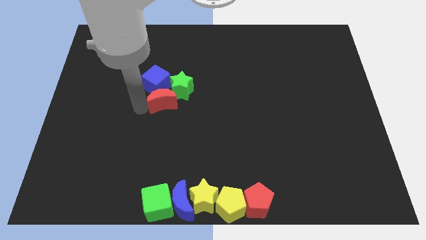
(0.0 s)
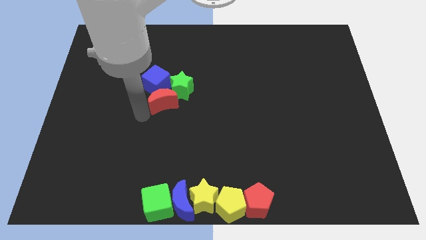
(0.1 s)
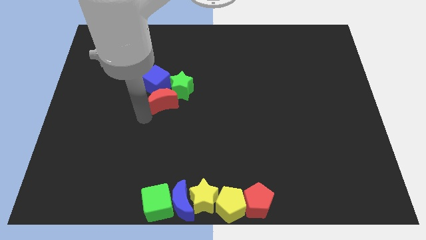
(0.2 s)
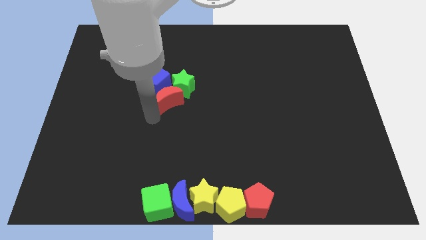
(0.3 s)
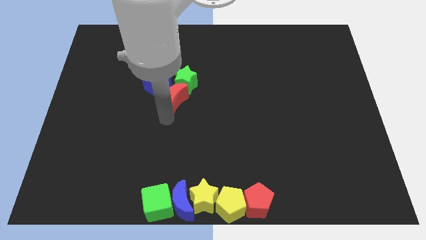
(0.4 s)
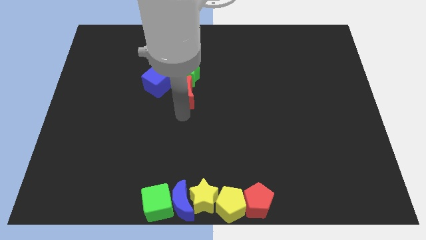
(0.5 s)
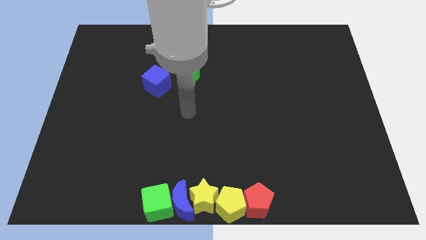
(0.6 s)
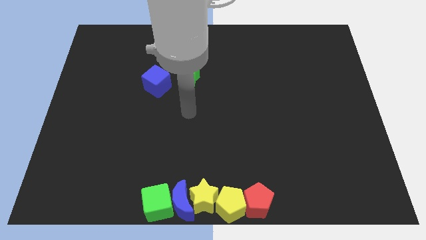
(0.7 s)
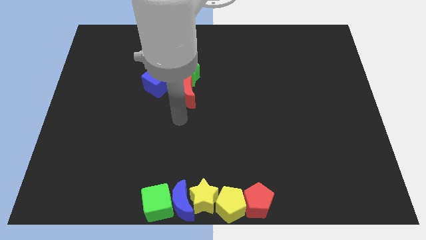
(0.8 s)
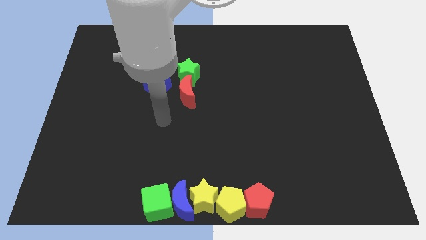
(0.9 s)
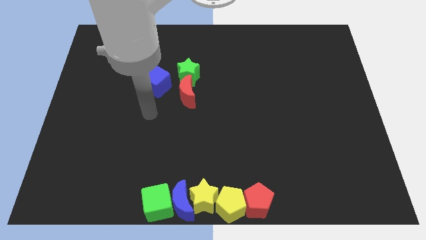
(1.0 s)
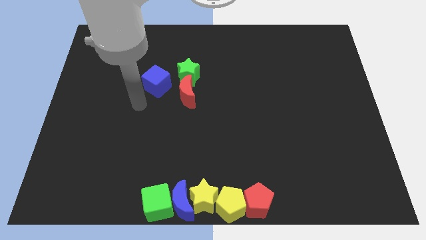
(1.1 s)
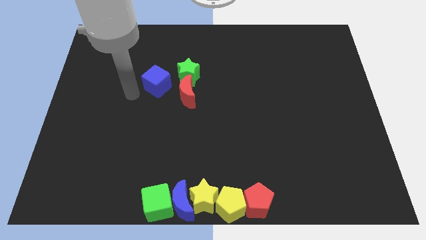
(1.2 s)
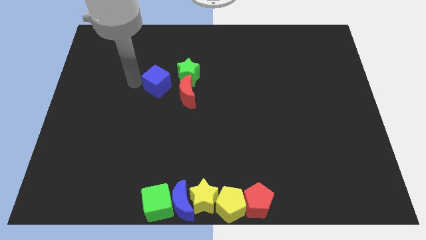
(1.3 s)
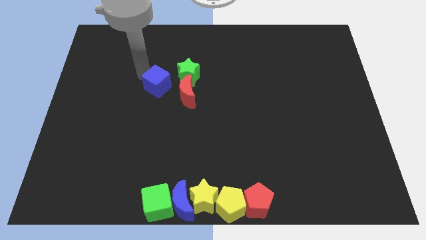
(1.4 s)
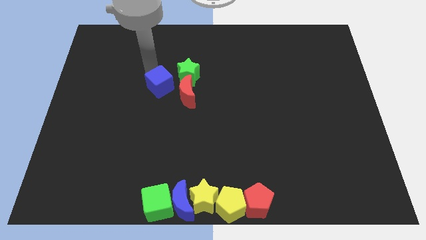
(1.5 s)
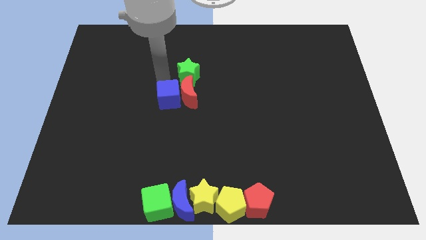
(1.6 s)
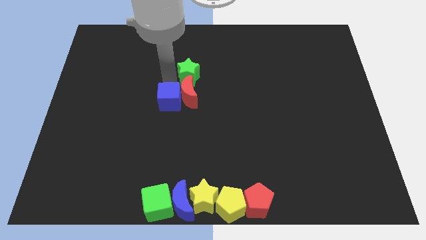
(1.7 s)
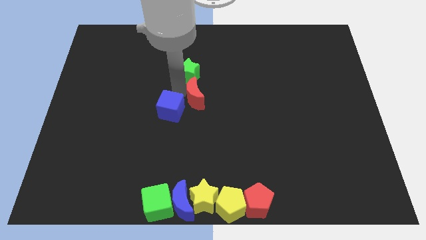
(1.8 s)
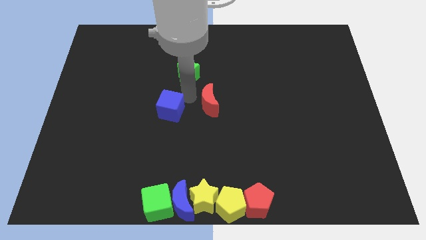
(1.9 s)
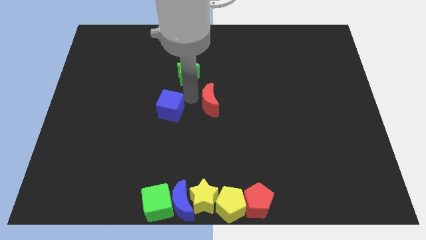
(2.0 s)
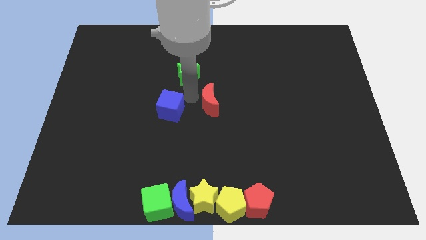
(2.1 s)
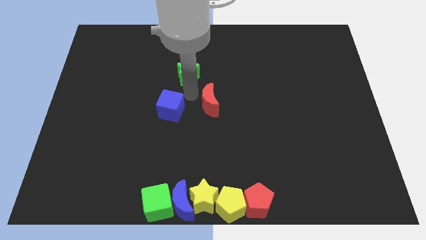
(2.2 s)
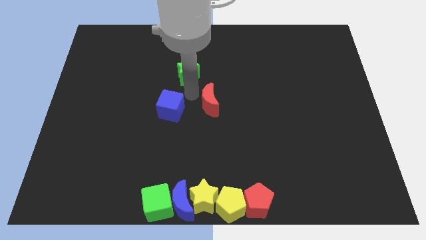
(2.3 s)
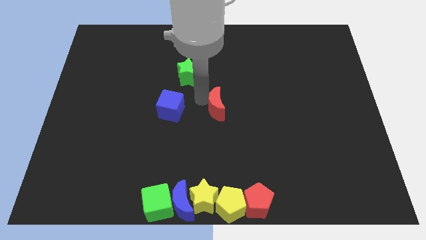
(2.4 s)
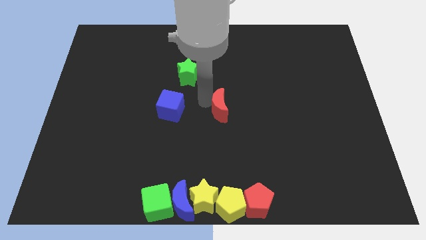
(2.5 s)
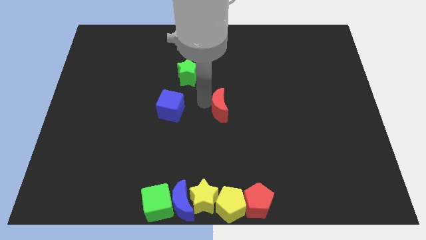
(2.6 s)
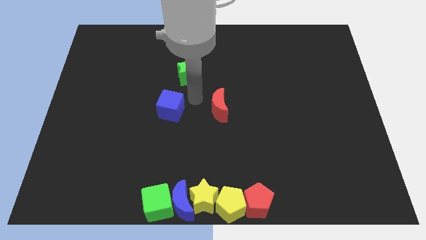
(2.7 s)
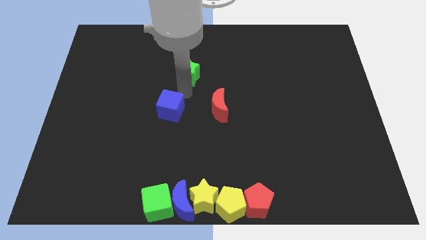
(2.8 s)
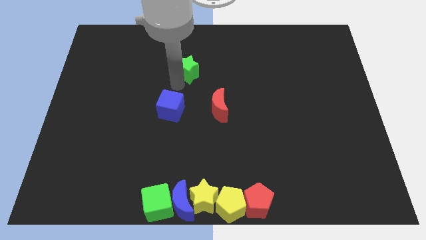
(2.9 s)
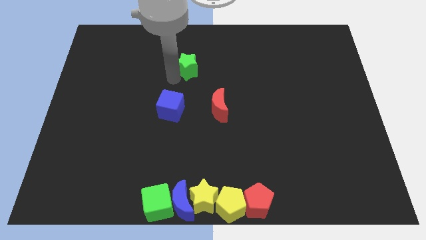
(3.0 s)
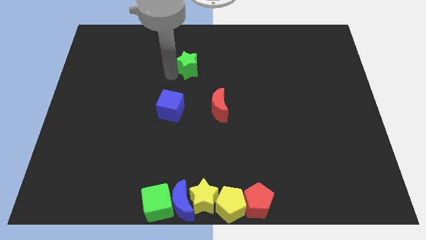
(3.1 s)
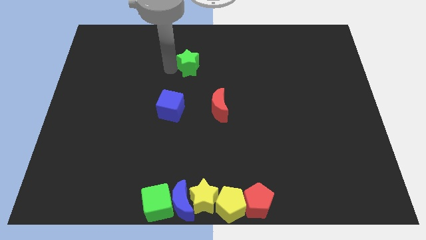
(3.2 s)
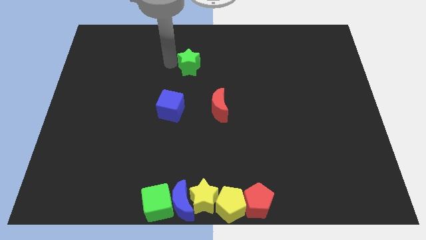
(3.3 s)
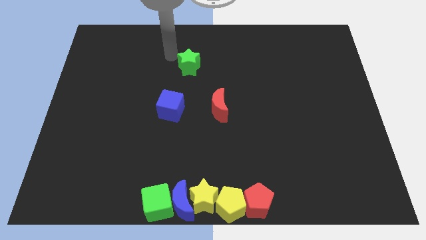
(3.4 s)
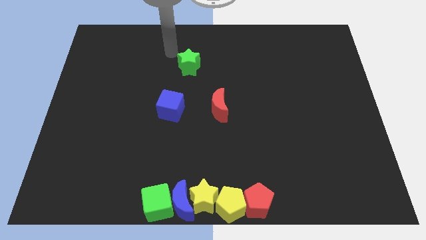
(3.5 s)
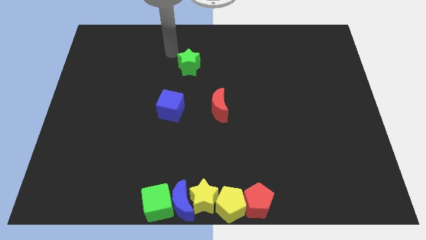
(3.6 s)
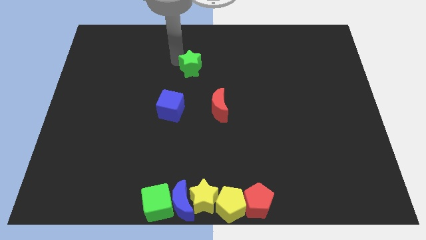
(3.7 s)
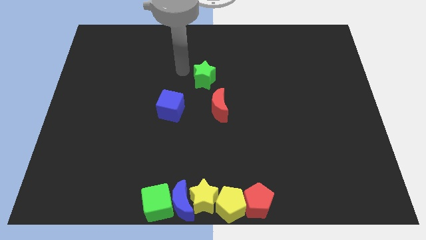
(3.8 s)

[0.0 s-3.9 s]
make a triangle with the blue cube red moon and green star above the other blocks

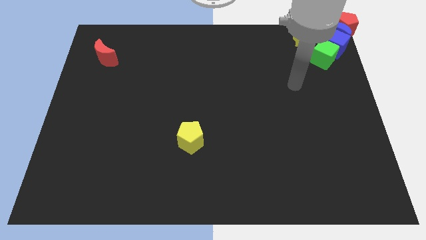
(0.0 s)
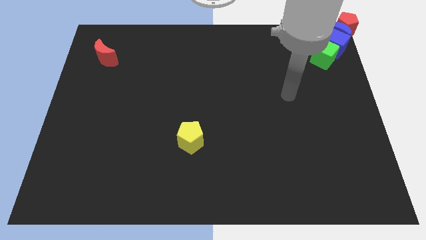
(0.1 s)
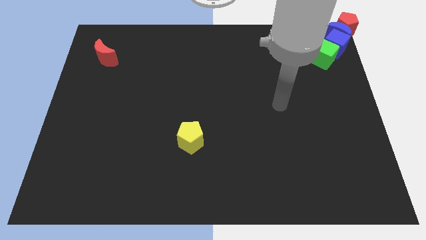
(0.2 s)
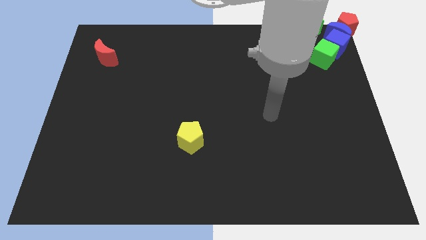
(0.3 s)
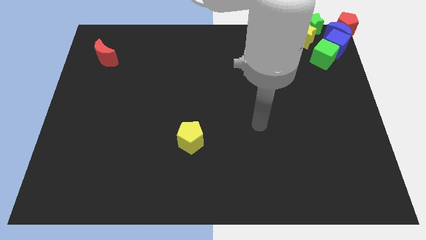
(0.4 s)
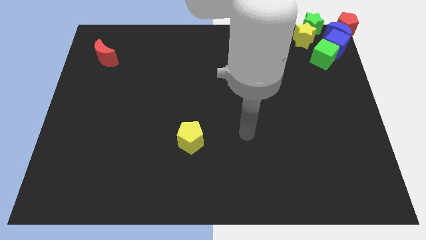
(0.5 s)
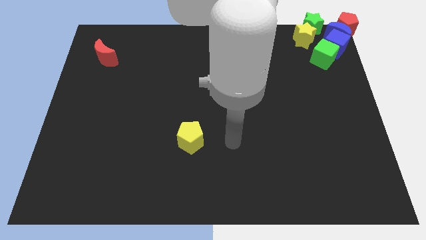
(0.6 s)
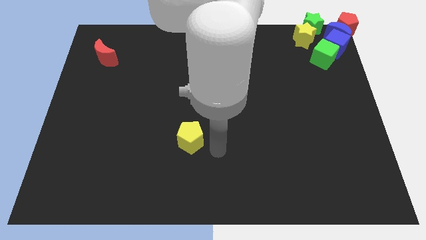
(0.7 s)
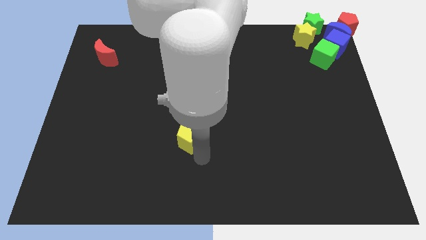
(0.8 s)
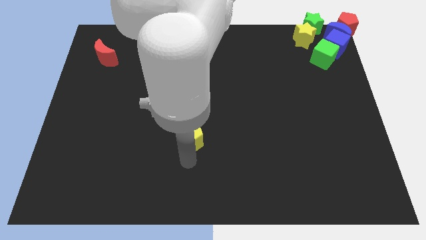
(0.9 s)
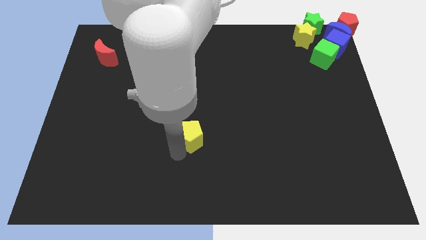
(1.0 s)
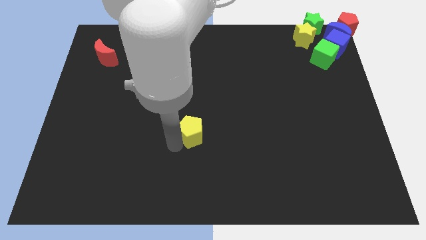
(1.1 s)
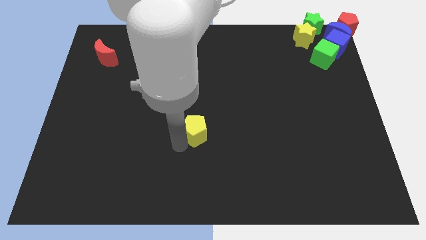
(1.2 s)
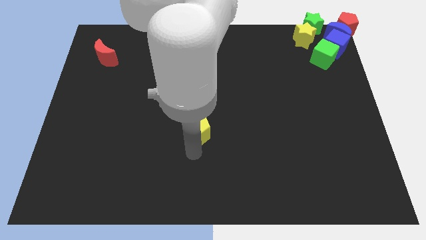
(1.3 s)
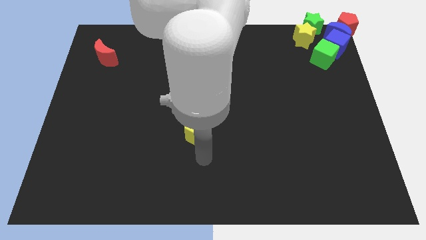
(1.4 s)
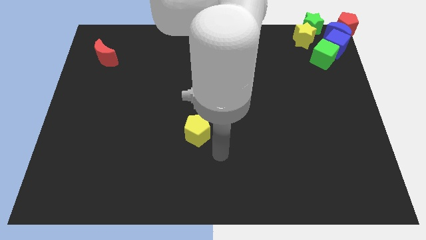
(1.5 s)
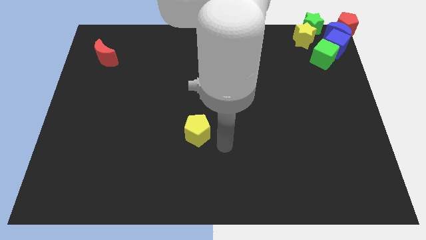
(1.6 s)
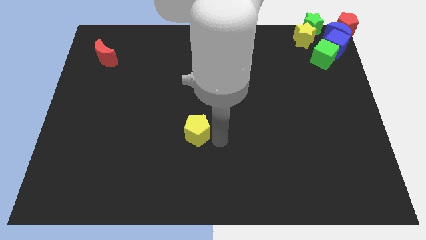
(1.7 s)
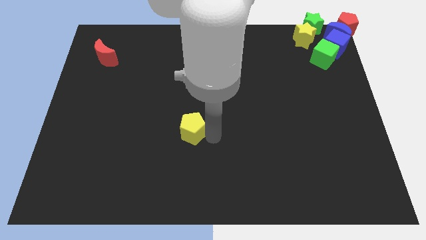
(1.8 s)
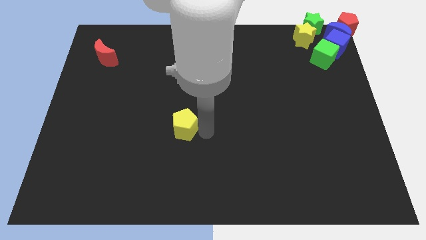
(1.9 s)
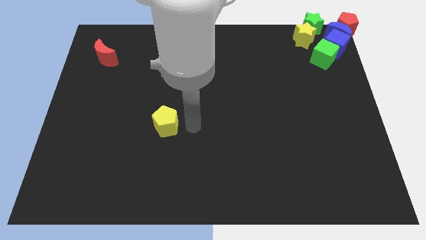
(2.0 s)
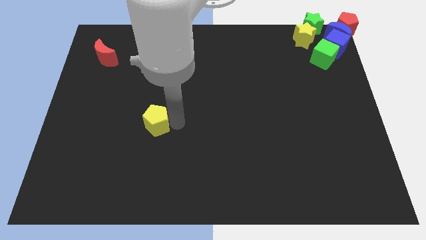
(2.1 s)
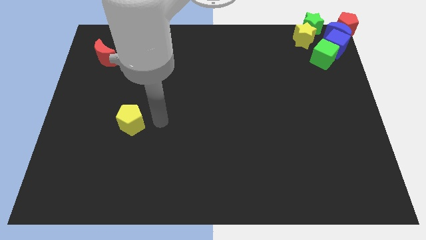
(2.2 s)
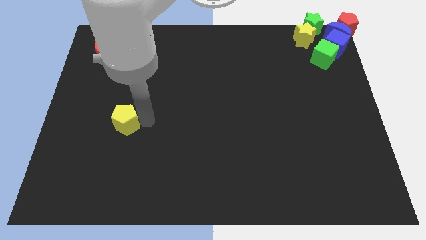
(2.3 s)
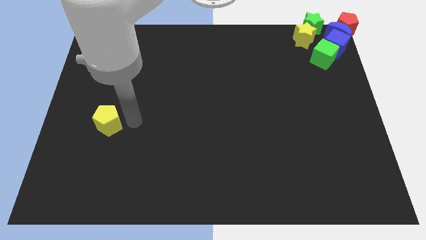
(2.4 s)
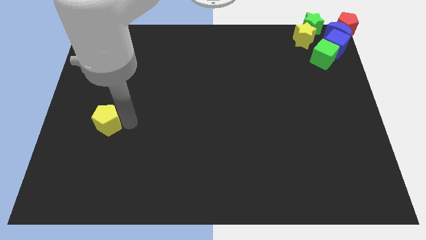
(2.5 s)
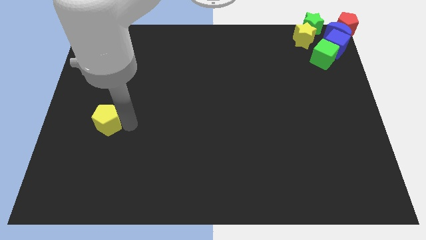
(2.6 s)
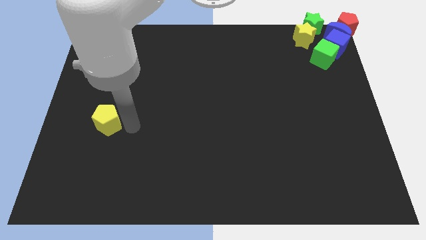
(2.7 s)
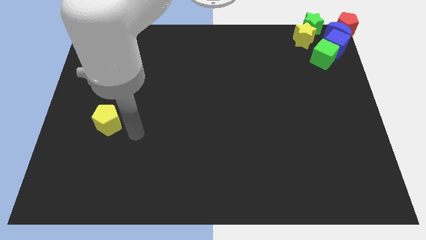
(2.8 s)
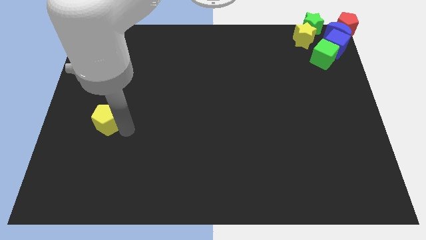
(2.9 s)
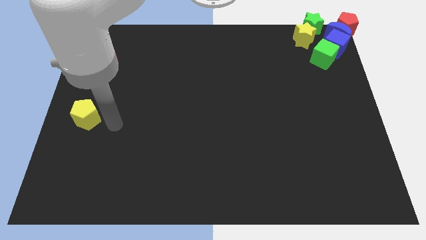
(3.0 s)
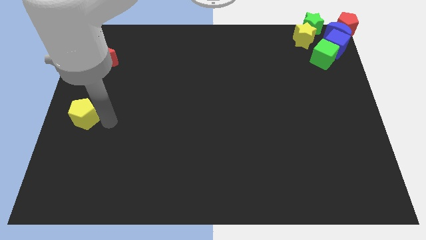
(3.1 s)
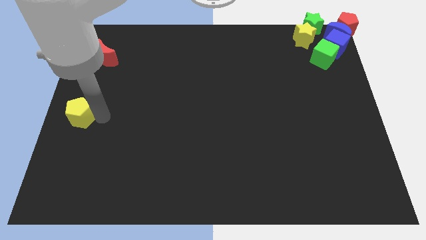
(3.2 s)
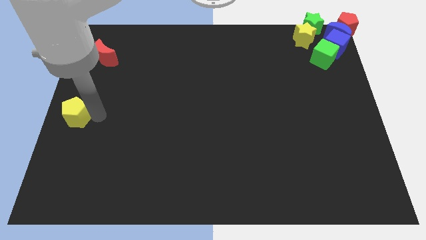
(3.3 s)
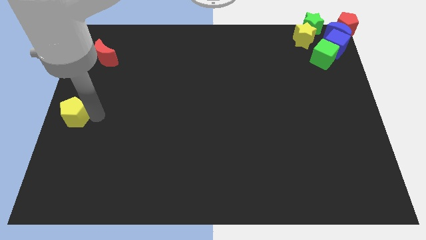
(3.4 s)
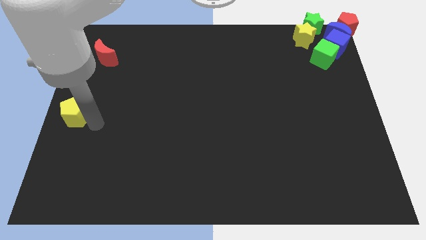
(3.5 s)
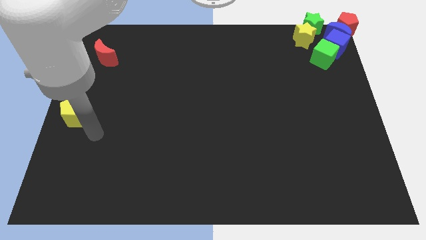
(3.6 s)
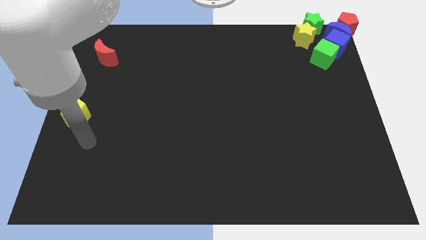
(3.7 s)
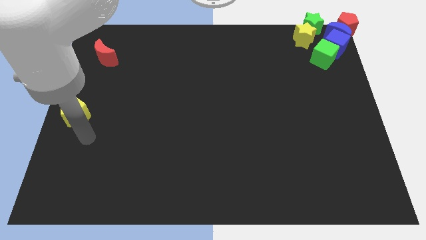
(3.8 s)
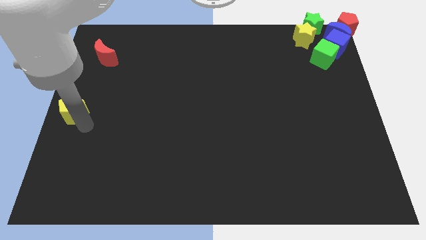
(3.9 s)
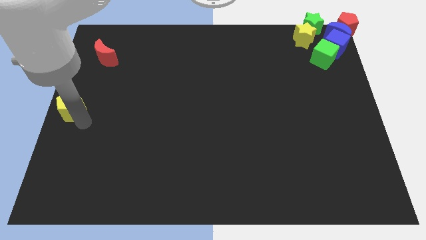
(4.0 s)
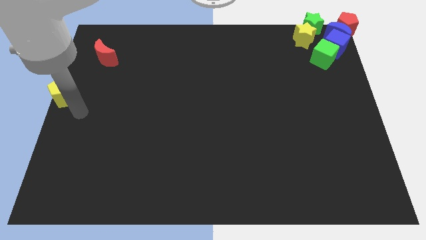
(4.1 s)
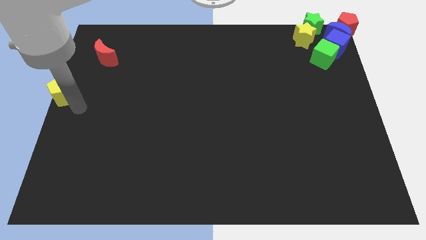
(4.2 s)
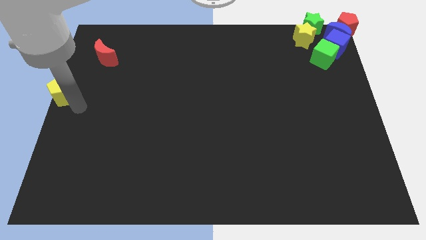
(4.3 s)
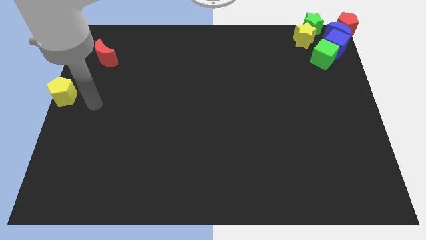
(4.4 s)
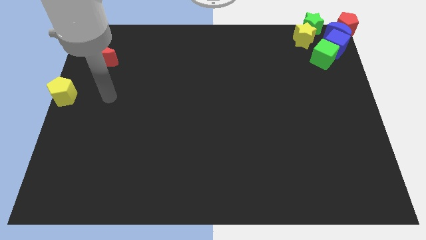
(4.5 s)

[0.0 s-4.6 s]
push the yellow pentagon to the left side of the board

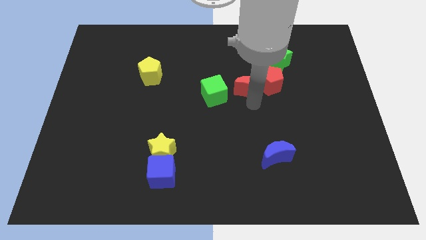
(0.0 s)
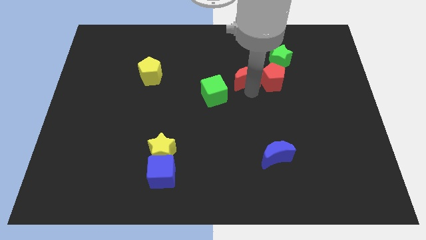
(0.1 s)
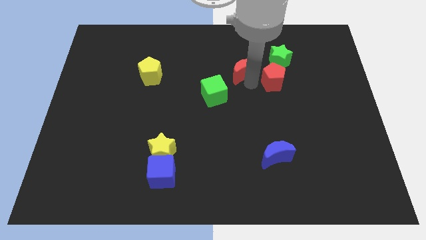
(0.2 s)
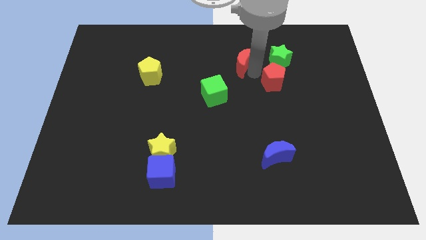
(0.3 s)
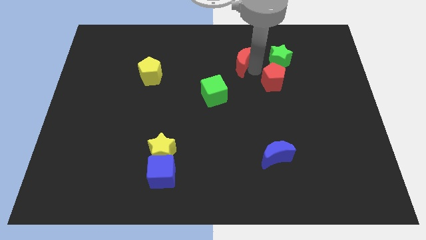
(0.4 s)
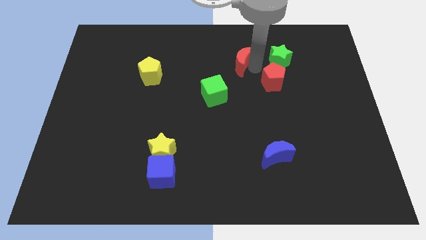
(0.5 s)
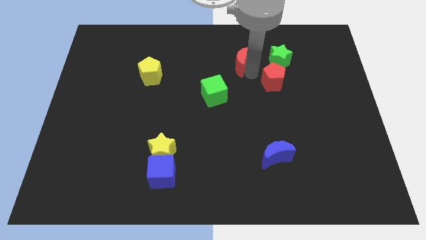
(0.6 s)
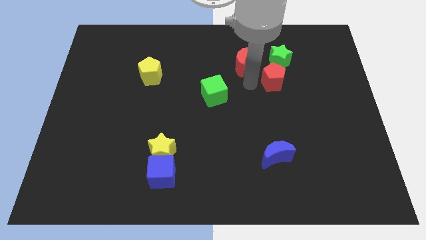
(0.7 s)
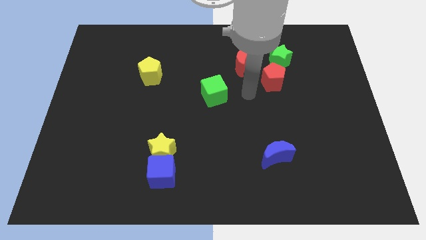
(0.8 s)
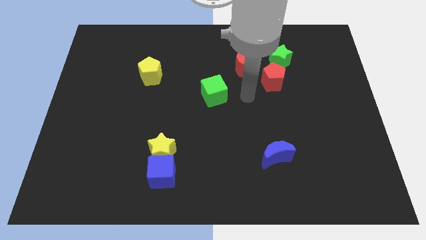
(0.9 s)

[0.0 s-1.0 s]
place the red moon left to the green star
